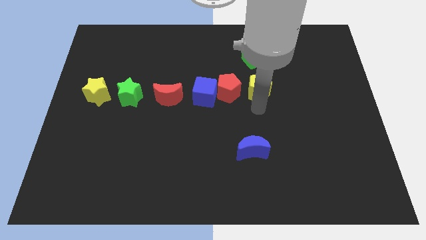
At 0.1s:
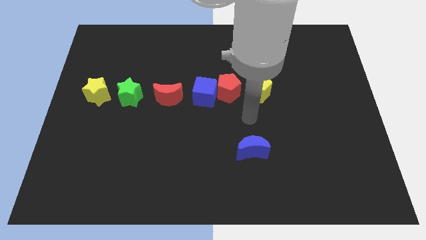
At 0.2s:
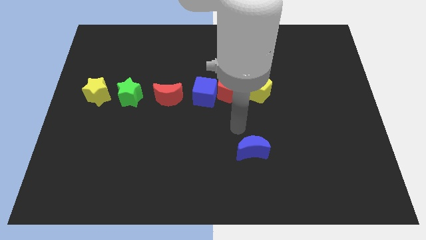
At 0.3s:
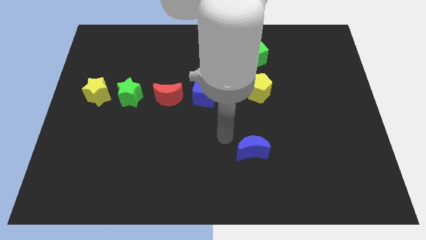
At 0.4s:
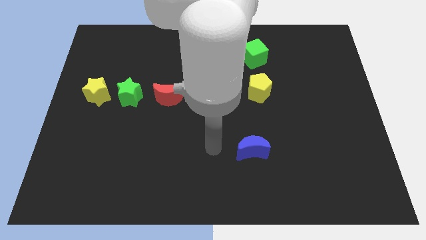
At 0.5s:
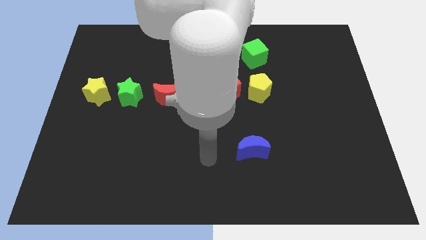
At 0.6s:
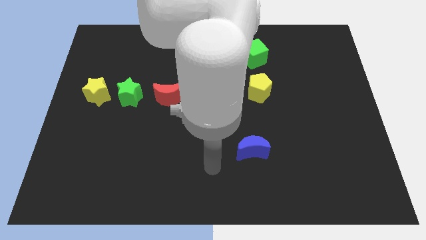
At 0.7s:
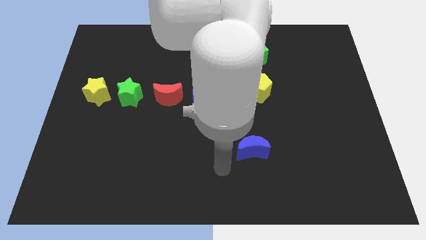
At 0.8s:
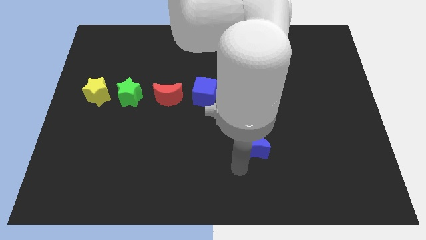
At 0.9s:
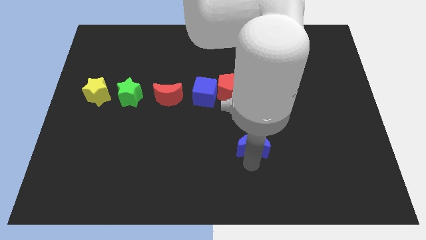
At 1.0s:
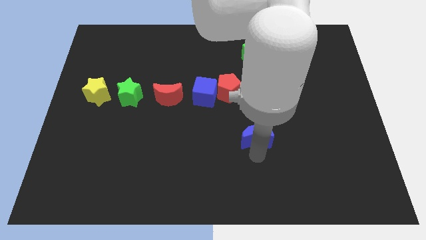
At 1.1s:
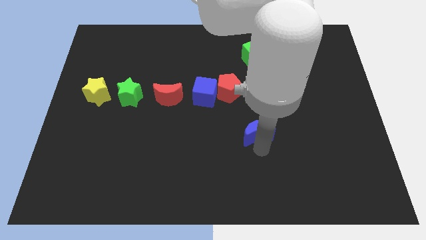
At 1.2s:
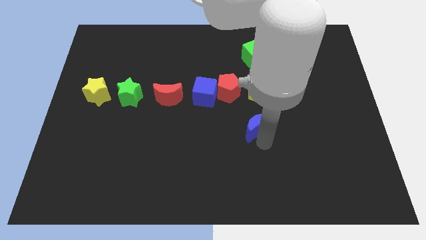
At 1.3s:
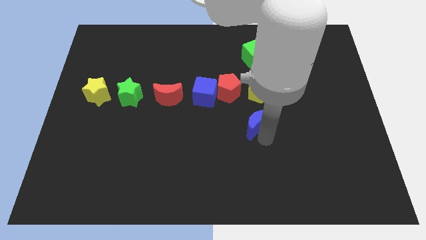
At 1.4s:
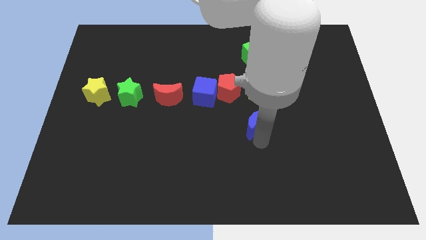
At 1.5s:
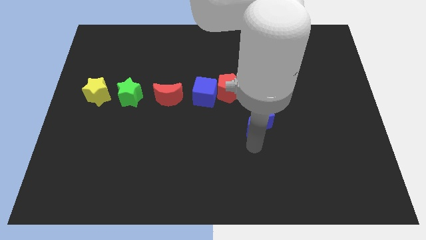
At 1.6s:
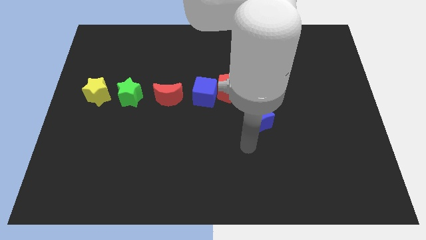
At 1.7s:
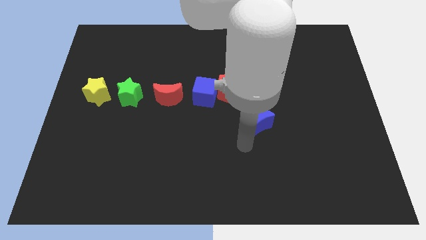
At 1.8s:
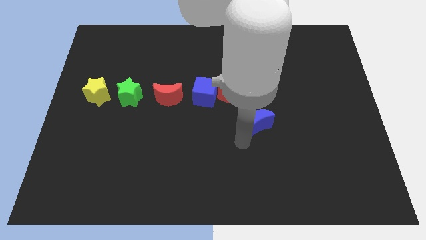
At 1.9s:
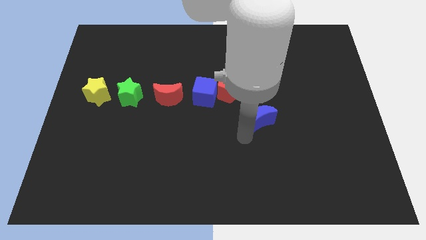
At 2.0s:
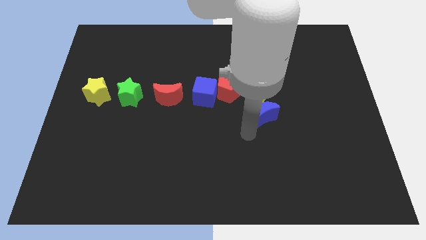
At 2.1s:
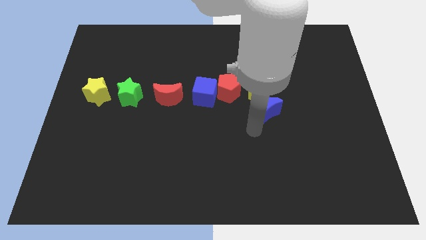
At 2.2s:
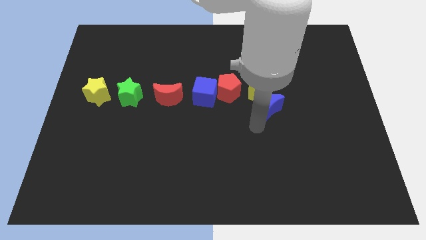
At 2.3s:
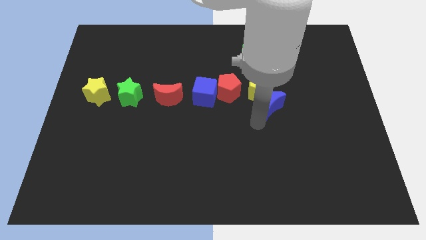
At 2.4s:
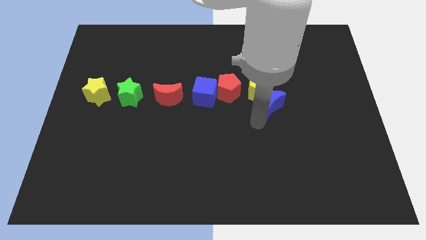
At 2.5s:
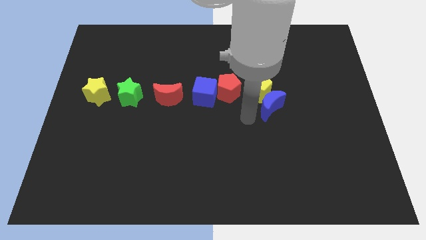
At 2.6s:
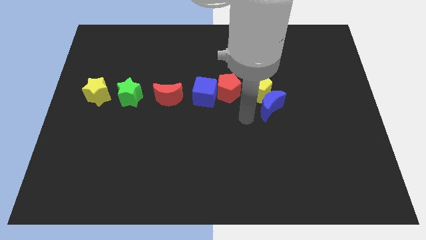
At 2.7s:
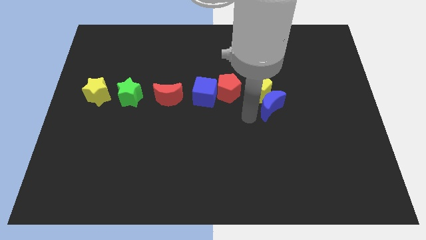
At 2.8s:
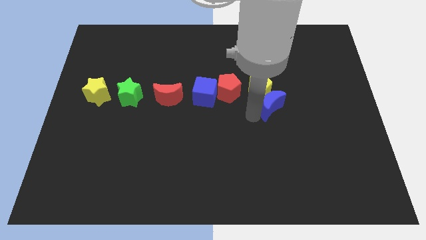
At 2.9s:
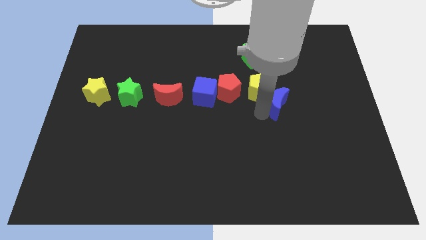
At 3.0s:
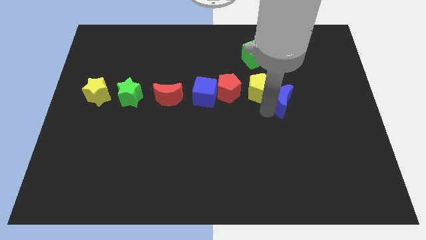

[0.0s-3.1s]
push blue crescent towards yellow pentagon

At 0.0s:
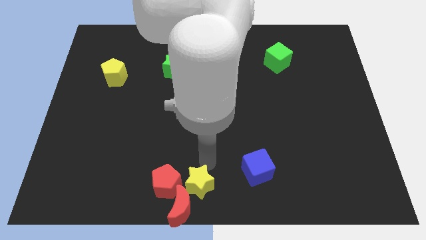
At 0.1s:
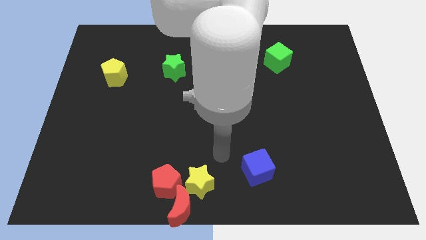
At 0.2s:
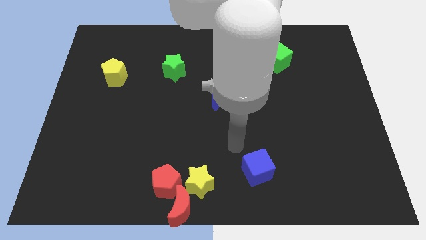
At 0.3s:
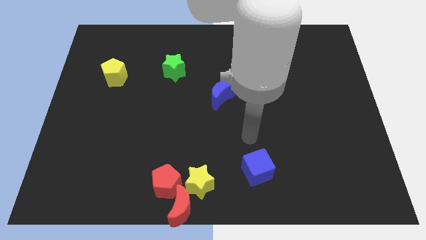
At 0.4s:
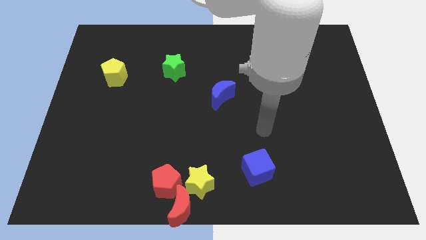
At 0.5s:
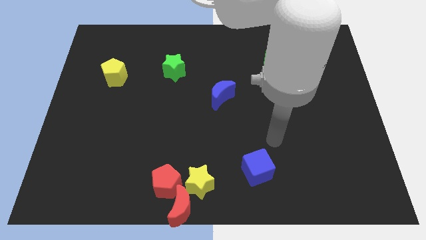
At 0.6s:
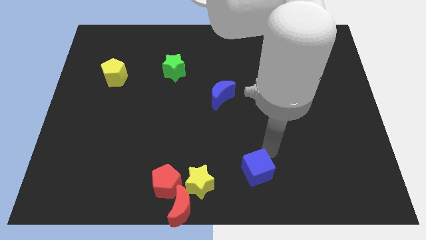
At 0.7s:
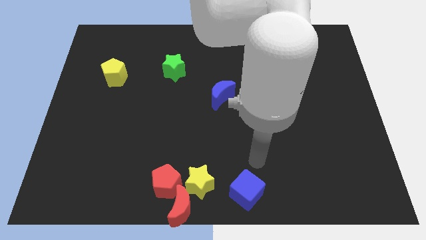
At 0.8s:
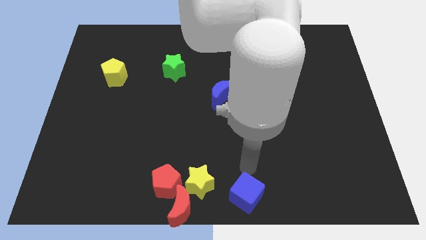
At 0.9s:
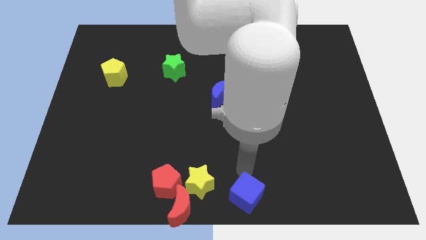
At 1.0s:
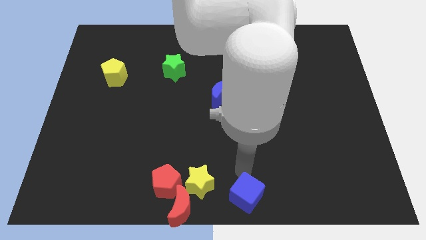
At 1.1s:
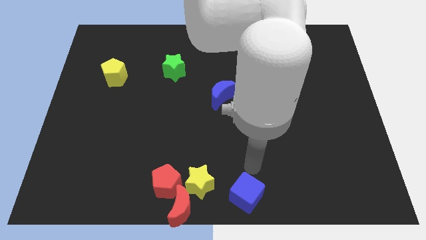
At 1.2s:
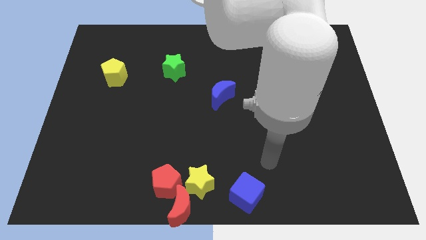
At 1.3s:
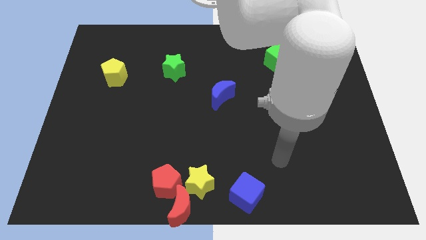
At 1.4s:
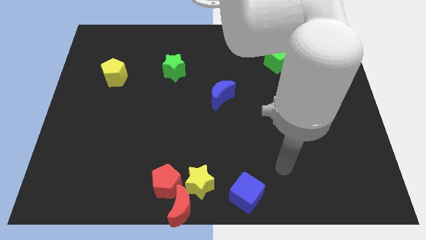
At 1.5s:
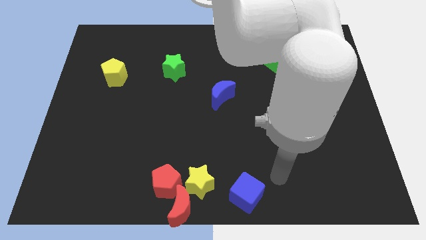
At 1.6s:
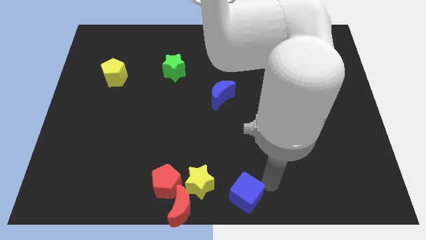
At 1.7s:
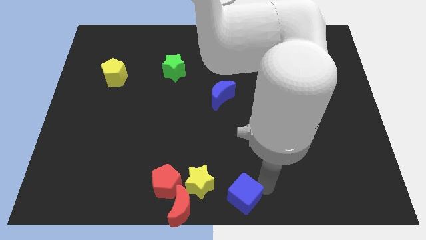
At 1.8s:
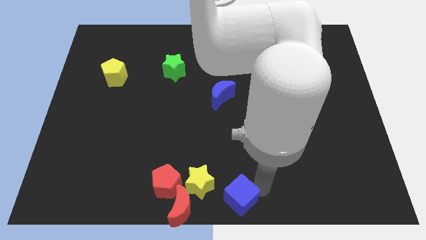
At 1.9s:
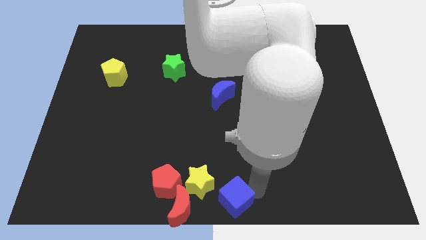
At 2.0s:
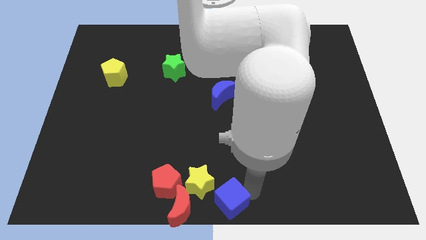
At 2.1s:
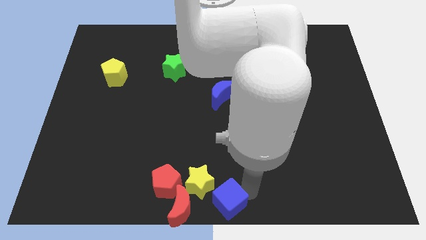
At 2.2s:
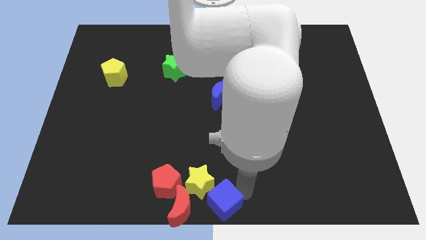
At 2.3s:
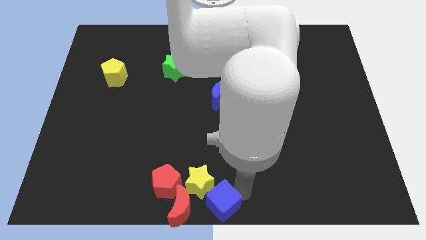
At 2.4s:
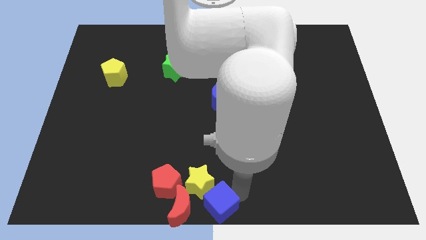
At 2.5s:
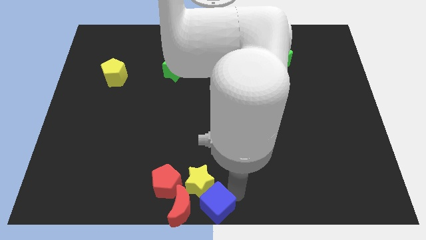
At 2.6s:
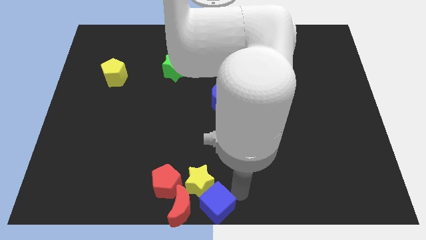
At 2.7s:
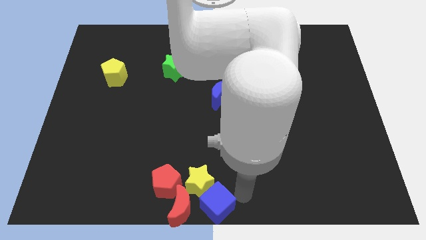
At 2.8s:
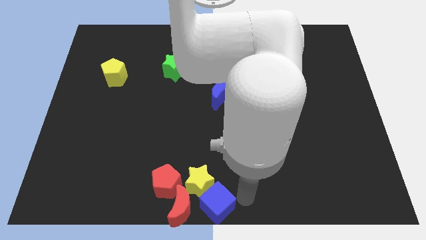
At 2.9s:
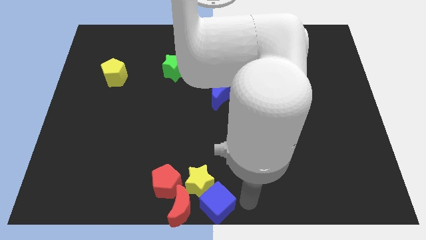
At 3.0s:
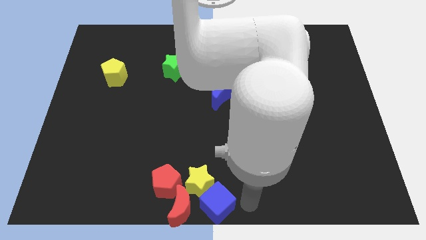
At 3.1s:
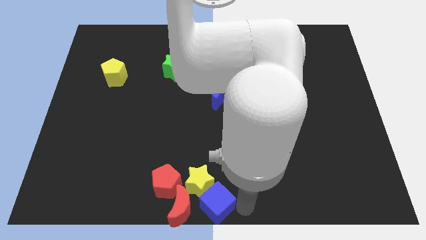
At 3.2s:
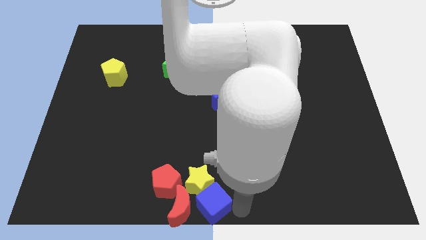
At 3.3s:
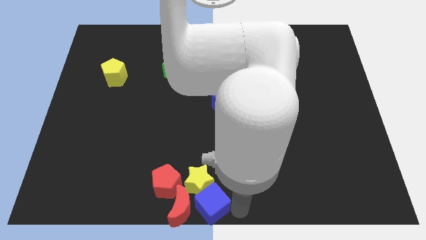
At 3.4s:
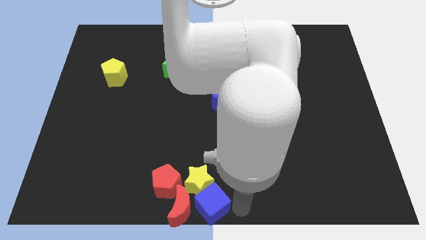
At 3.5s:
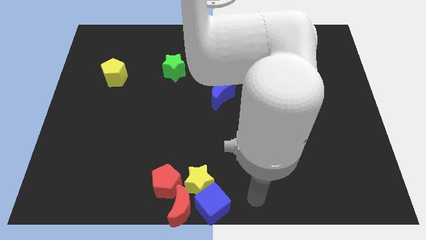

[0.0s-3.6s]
move the blue cube bottom center of the board

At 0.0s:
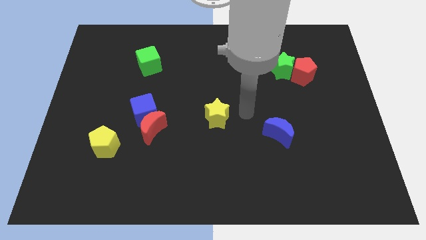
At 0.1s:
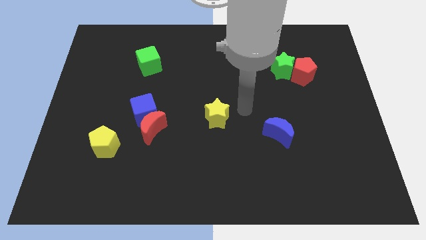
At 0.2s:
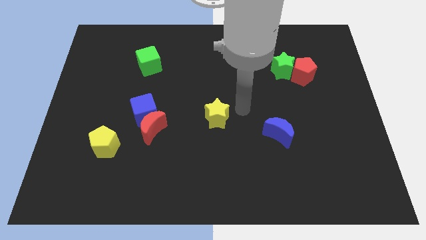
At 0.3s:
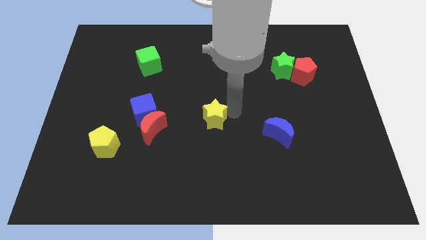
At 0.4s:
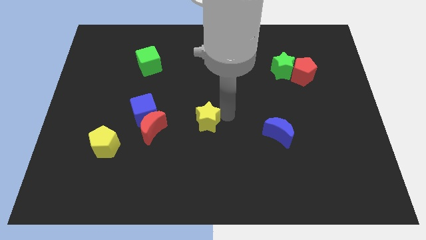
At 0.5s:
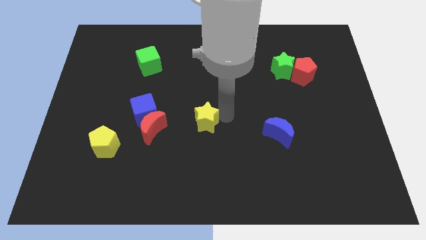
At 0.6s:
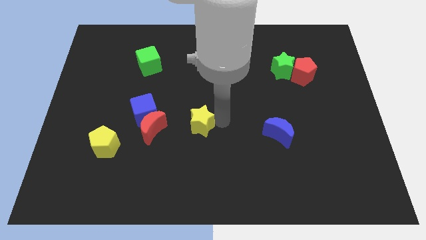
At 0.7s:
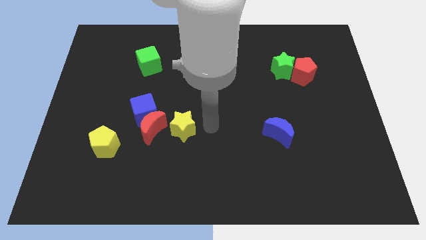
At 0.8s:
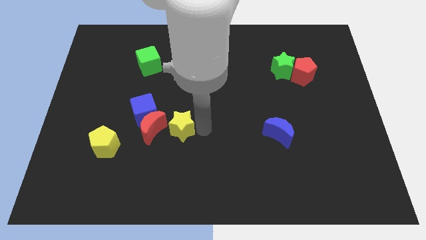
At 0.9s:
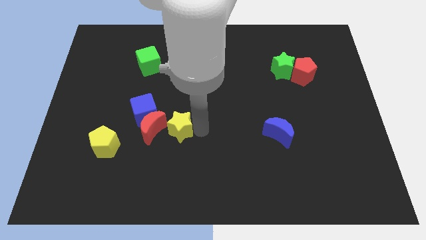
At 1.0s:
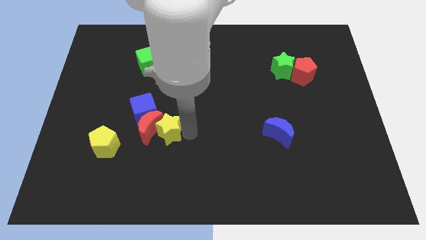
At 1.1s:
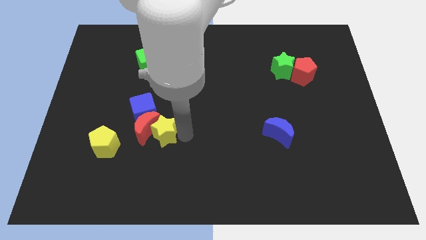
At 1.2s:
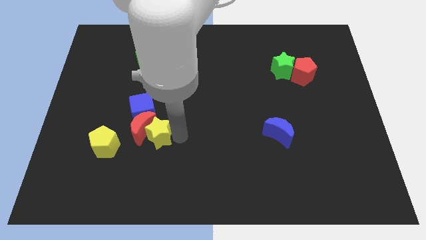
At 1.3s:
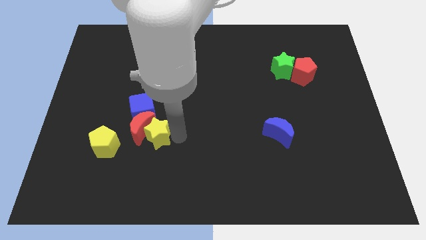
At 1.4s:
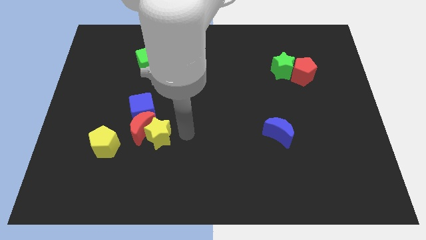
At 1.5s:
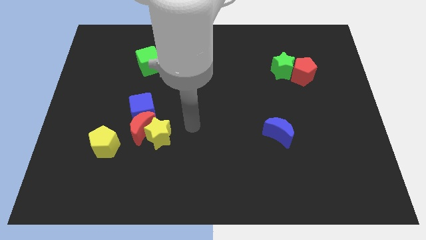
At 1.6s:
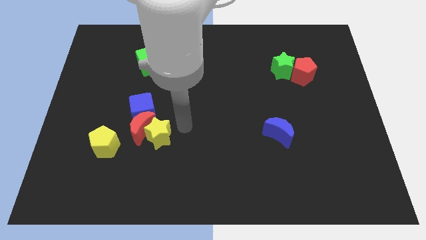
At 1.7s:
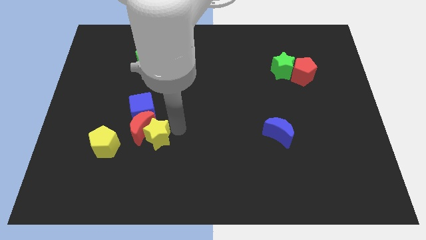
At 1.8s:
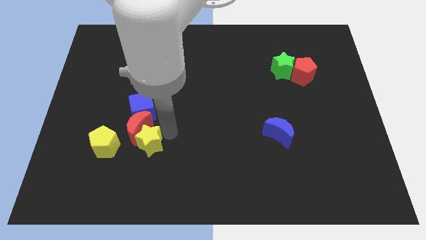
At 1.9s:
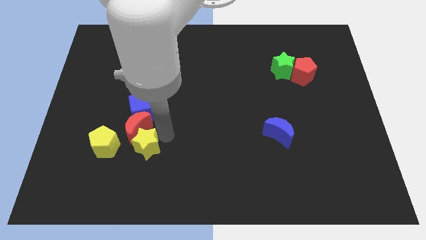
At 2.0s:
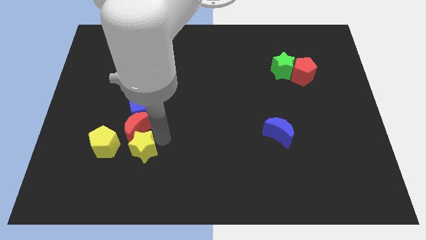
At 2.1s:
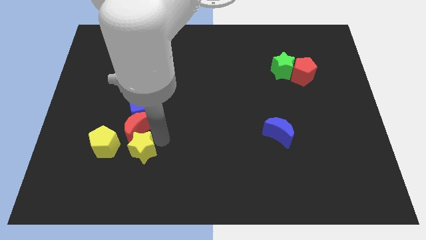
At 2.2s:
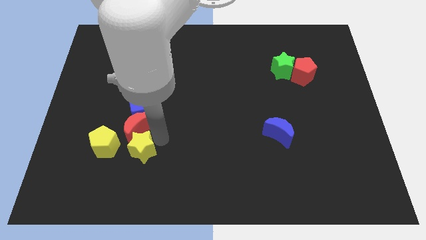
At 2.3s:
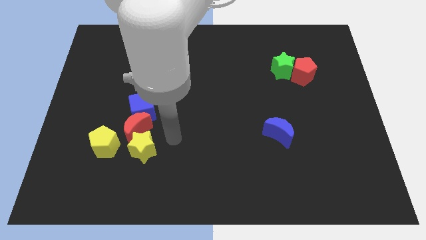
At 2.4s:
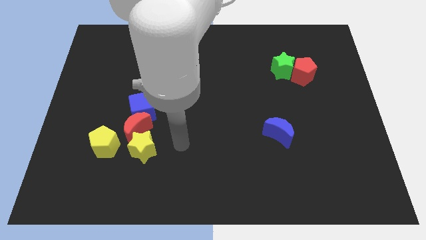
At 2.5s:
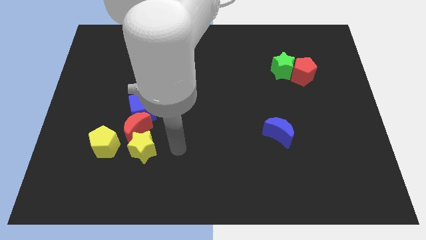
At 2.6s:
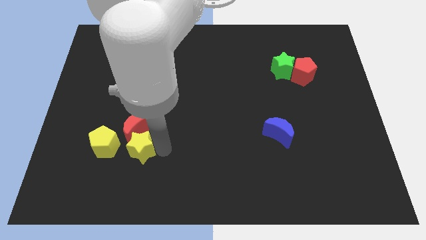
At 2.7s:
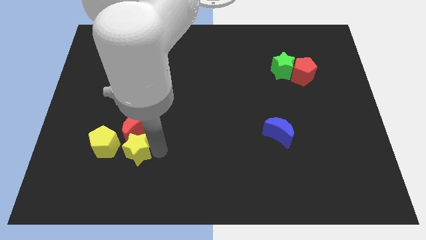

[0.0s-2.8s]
push the yellow star to the bottom of the red crescent
